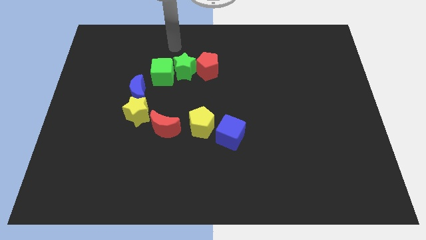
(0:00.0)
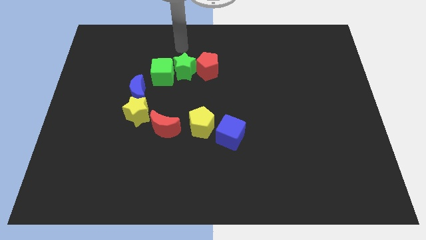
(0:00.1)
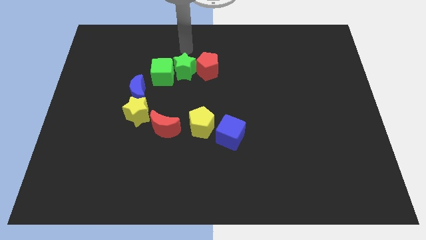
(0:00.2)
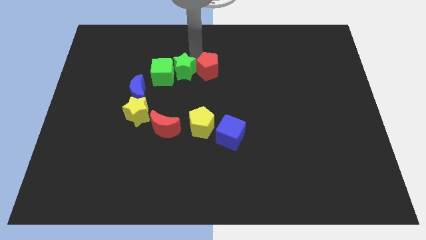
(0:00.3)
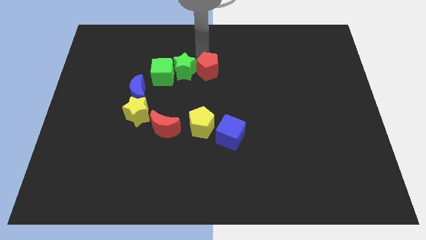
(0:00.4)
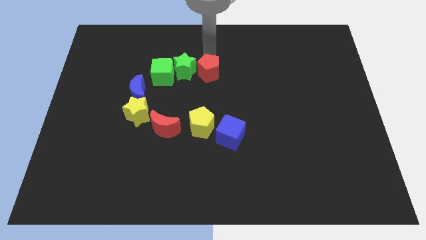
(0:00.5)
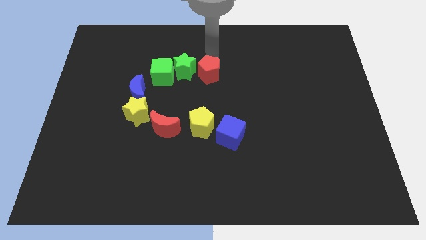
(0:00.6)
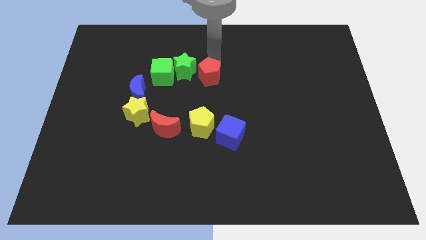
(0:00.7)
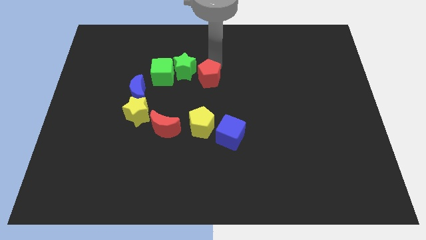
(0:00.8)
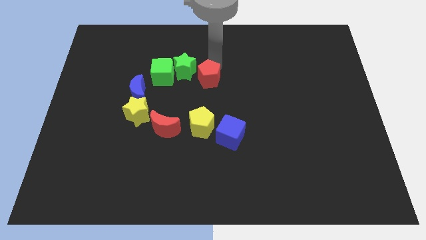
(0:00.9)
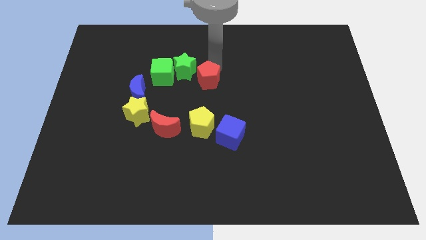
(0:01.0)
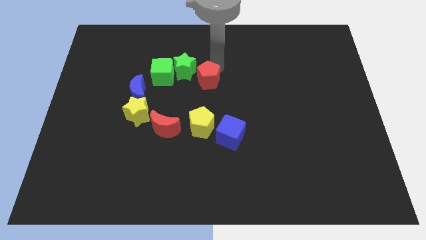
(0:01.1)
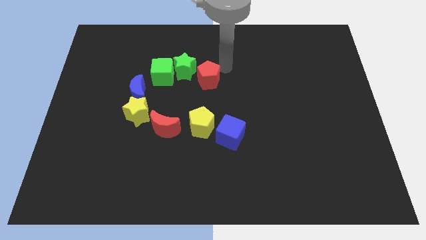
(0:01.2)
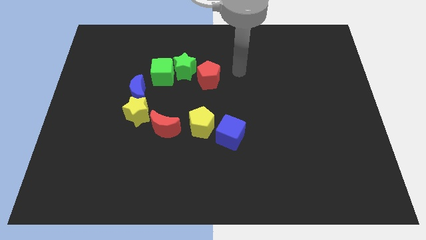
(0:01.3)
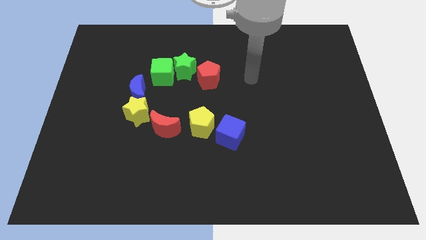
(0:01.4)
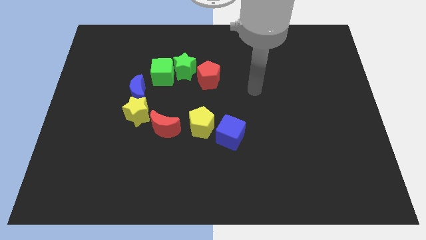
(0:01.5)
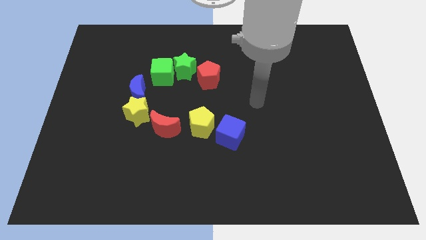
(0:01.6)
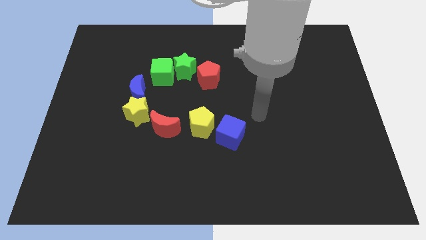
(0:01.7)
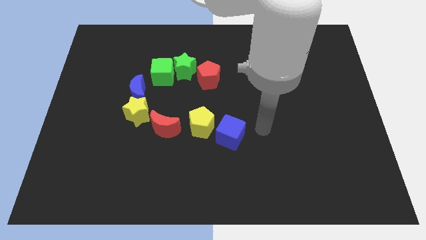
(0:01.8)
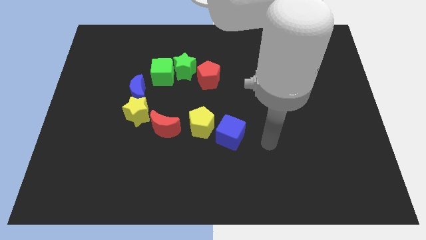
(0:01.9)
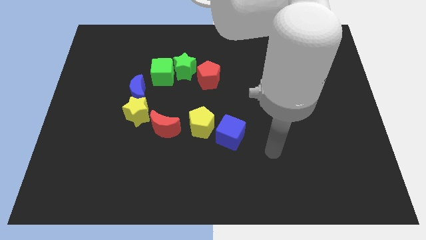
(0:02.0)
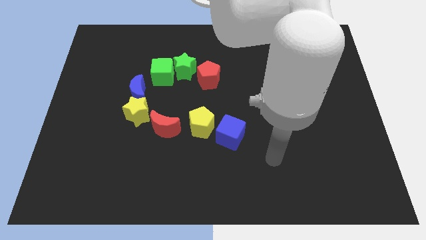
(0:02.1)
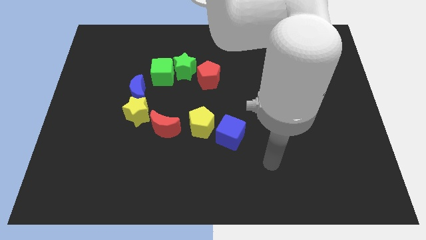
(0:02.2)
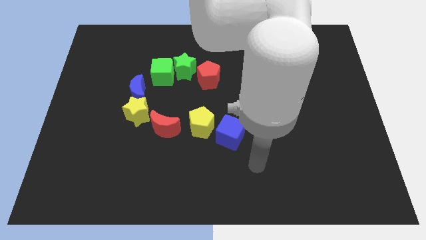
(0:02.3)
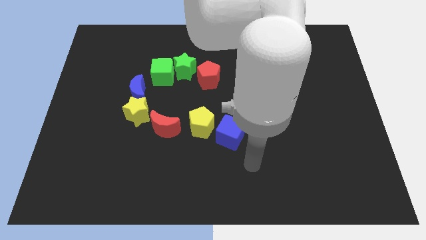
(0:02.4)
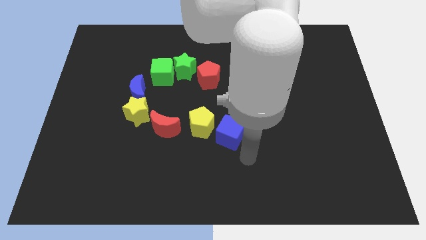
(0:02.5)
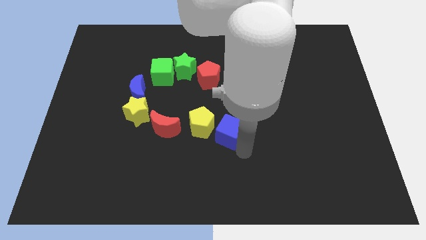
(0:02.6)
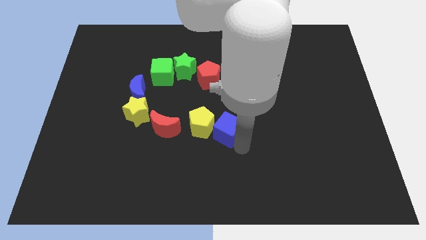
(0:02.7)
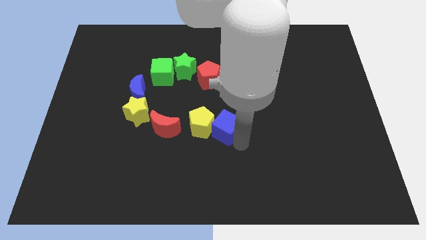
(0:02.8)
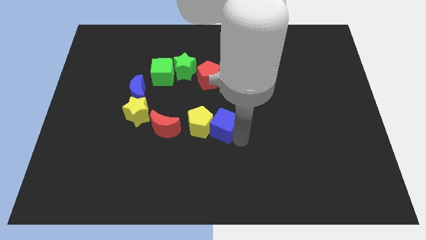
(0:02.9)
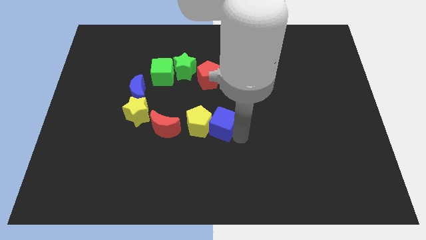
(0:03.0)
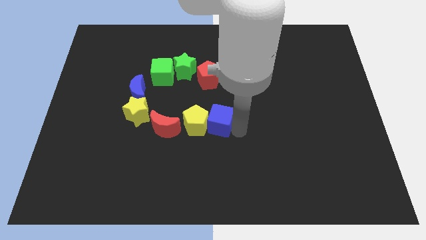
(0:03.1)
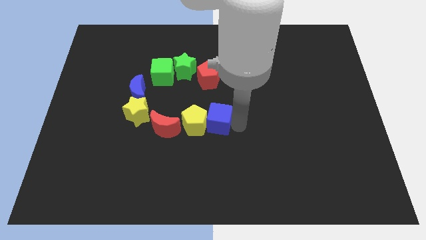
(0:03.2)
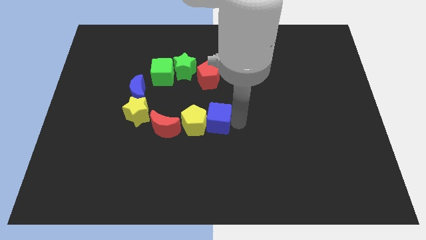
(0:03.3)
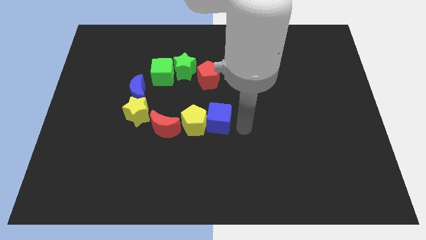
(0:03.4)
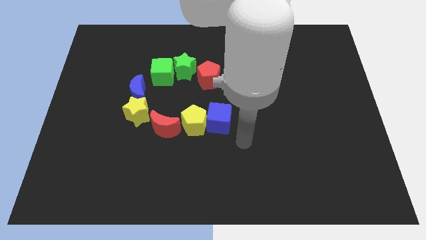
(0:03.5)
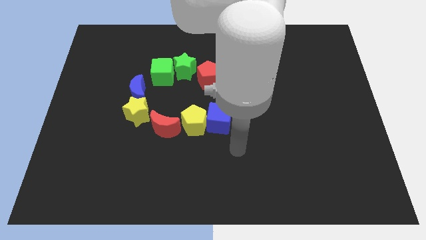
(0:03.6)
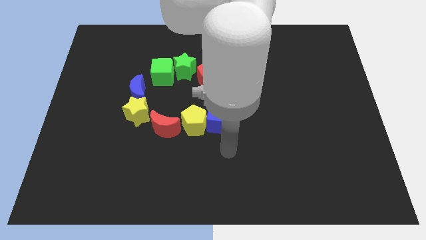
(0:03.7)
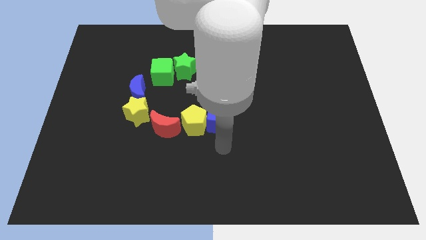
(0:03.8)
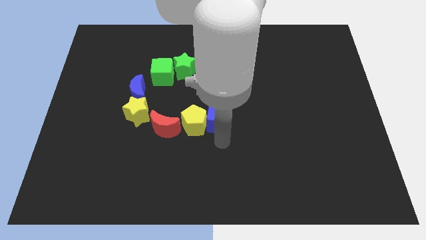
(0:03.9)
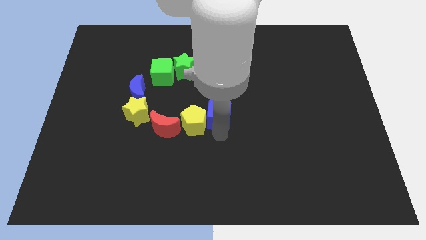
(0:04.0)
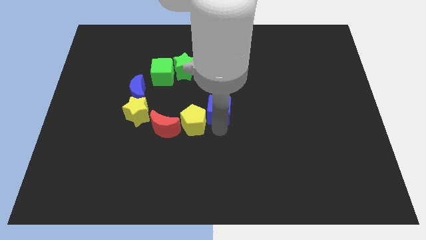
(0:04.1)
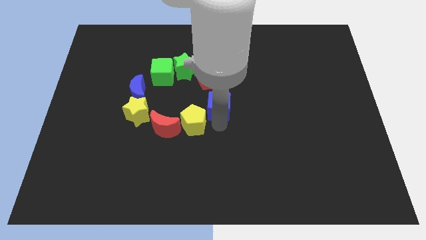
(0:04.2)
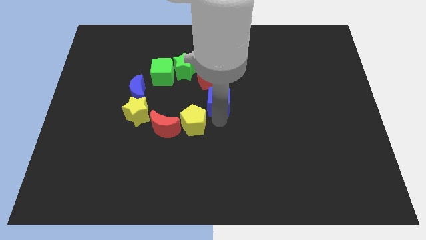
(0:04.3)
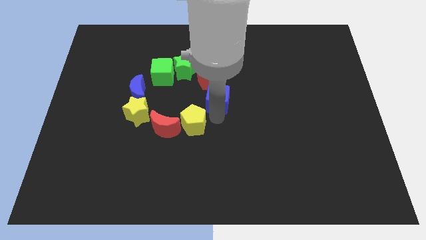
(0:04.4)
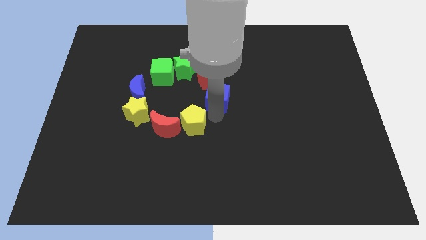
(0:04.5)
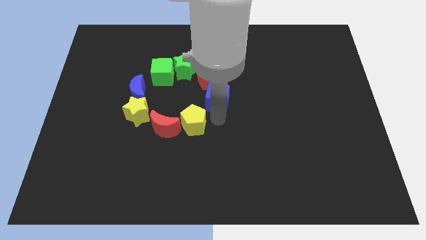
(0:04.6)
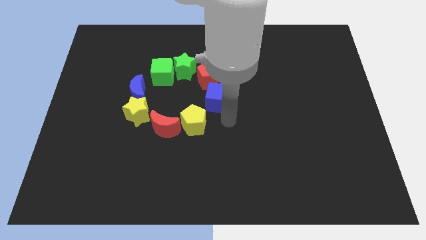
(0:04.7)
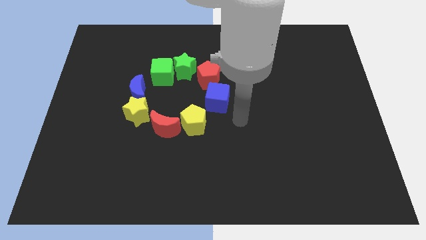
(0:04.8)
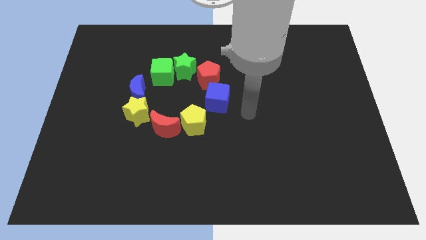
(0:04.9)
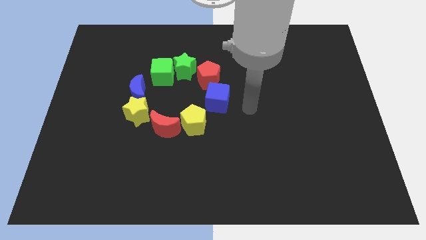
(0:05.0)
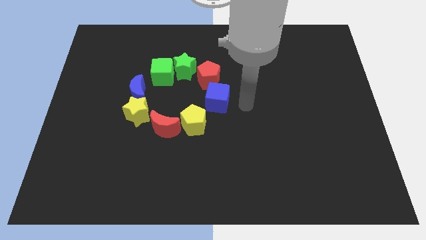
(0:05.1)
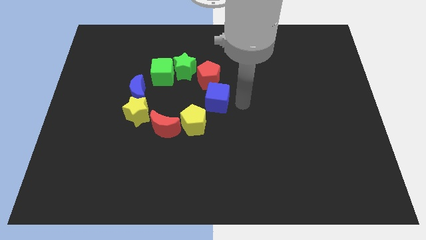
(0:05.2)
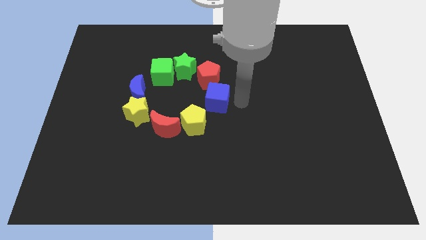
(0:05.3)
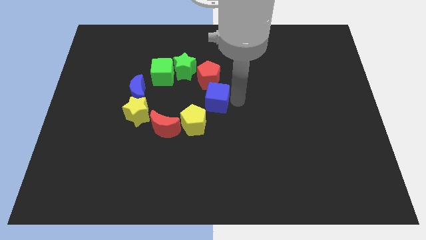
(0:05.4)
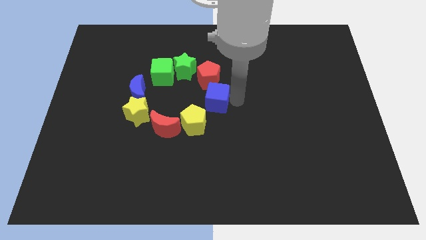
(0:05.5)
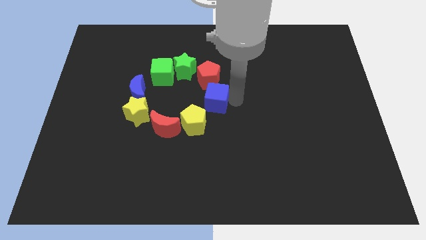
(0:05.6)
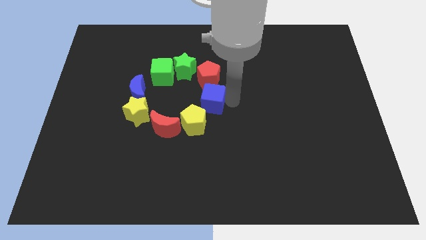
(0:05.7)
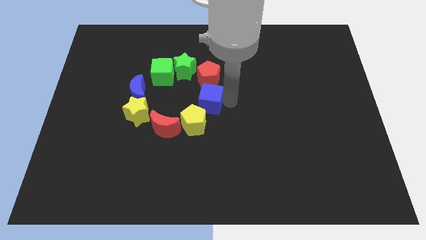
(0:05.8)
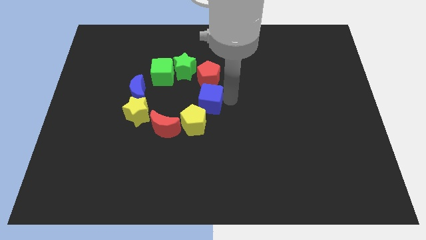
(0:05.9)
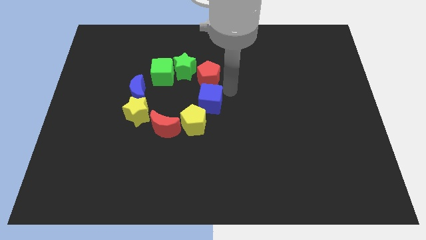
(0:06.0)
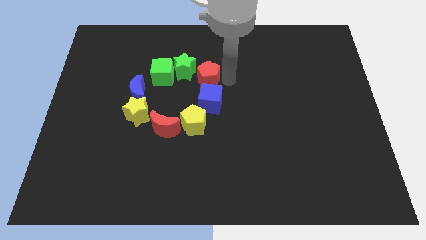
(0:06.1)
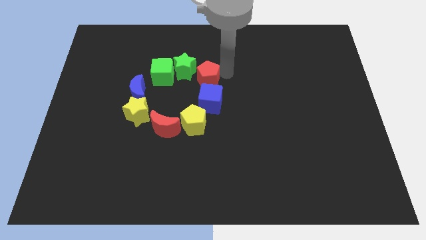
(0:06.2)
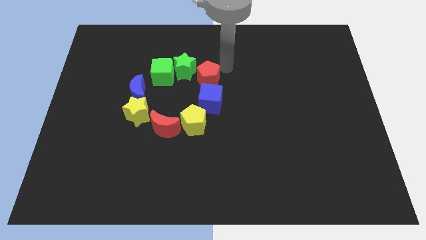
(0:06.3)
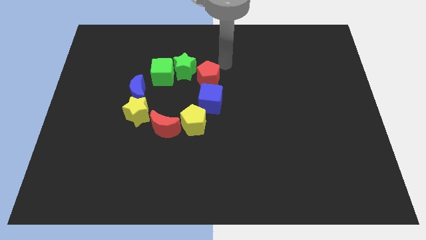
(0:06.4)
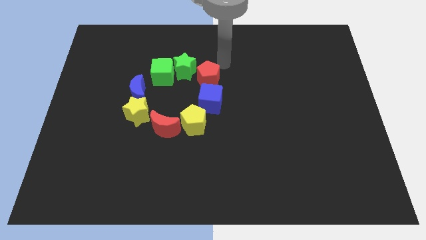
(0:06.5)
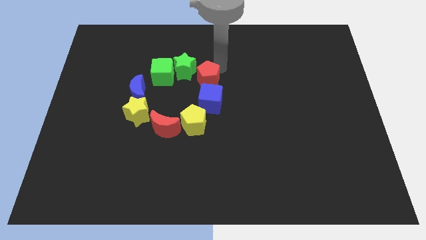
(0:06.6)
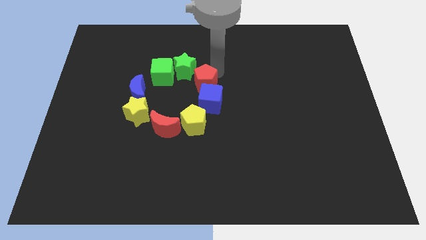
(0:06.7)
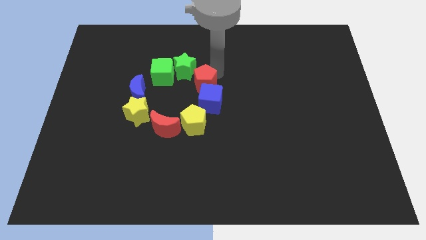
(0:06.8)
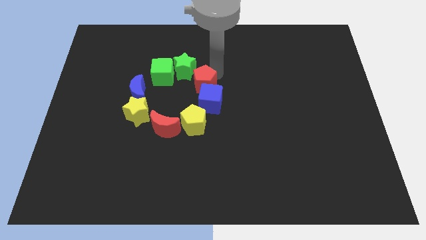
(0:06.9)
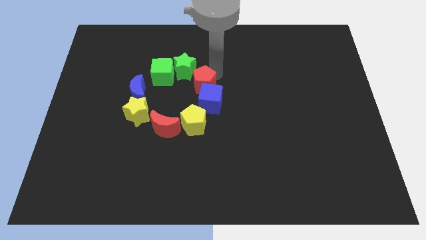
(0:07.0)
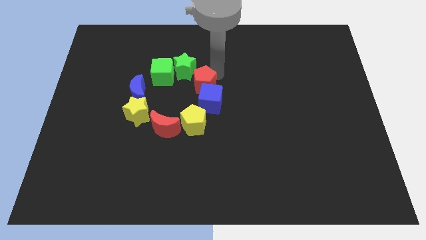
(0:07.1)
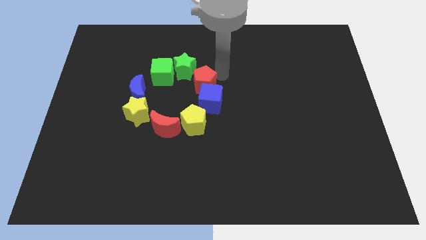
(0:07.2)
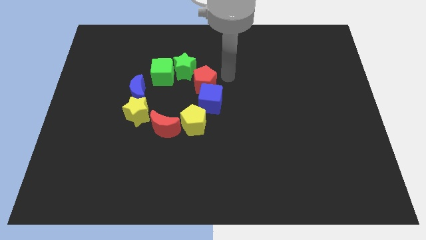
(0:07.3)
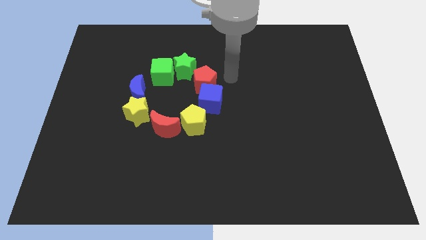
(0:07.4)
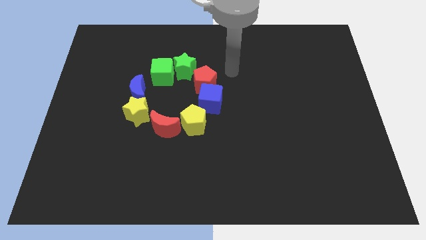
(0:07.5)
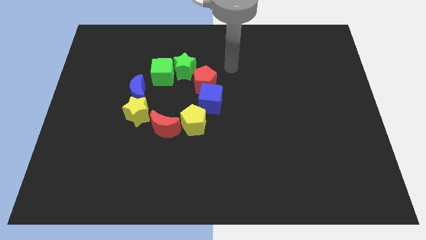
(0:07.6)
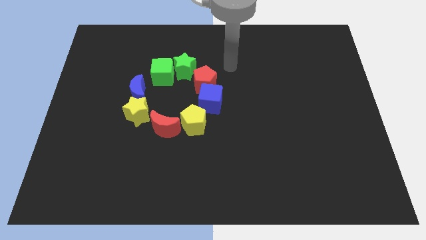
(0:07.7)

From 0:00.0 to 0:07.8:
make a circle with all the blocks at the center of the board

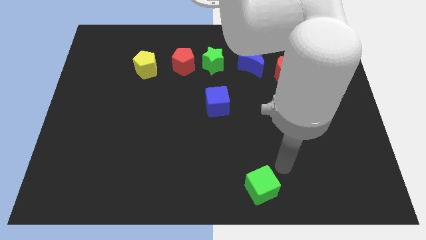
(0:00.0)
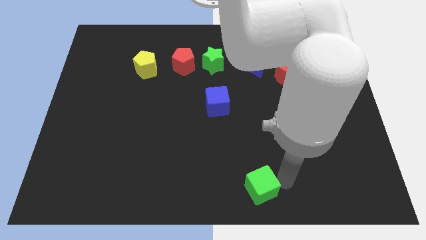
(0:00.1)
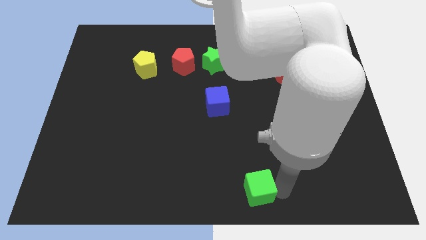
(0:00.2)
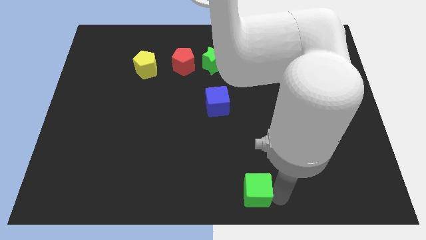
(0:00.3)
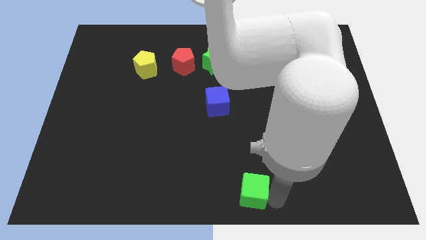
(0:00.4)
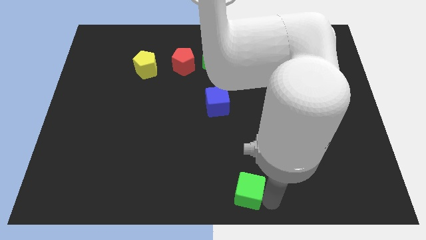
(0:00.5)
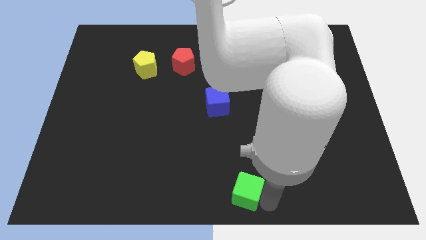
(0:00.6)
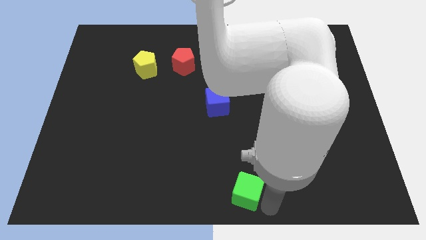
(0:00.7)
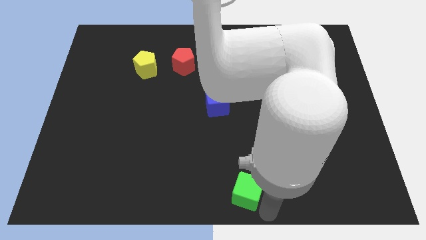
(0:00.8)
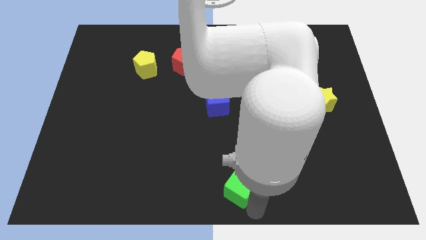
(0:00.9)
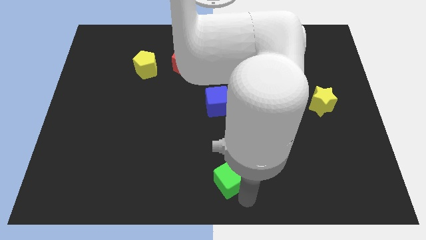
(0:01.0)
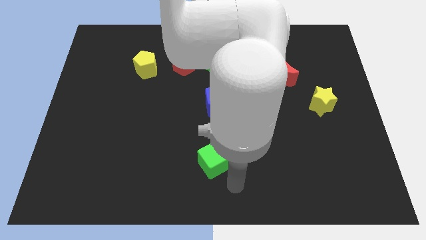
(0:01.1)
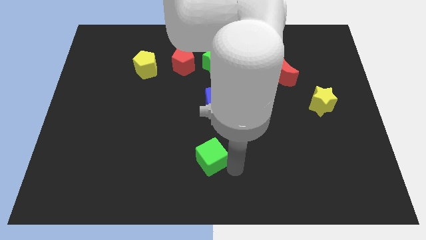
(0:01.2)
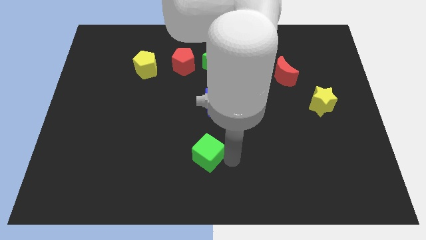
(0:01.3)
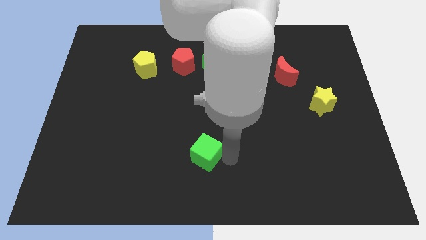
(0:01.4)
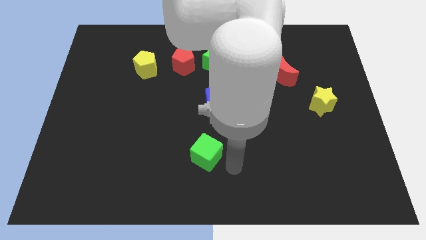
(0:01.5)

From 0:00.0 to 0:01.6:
move the green cube diagonally below the blue cube
